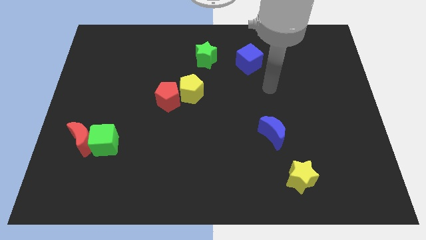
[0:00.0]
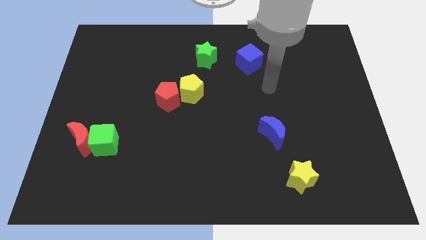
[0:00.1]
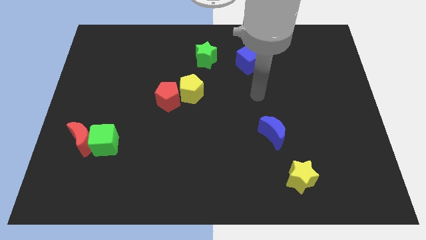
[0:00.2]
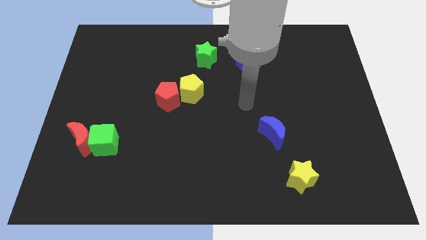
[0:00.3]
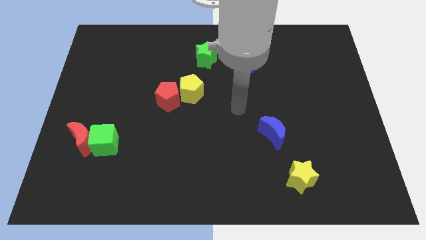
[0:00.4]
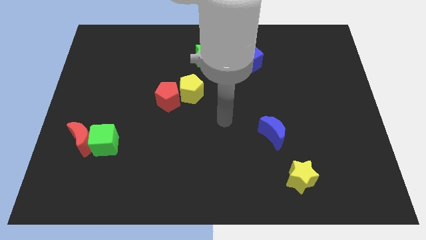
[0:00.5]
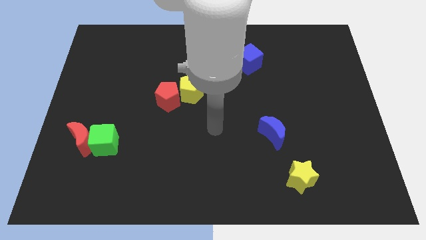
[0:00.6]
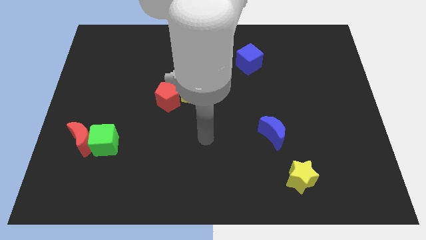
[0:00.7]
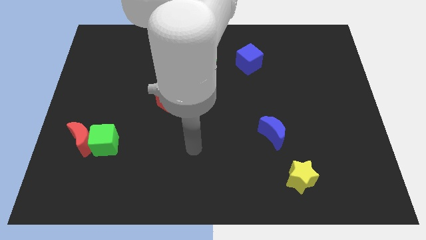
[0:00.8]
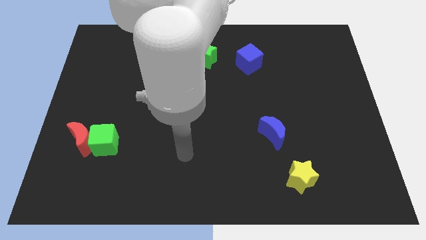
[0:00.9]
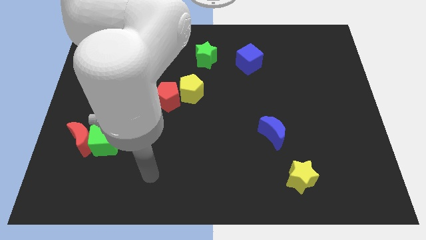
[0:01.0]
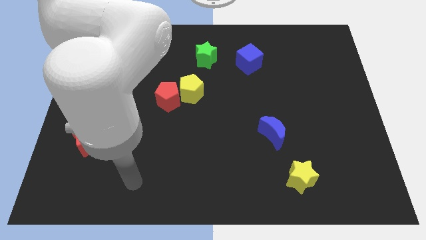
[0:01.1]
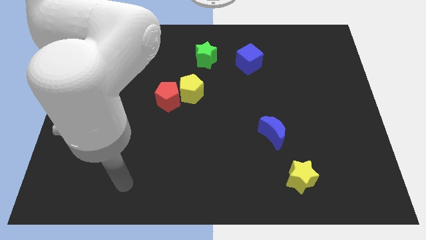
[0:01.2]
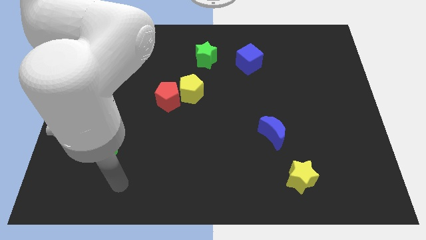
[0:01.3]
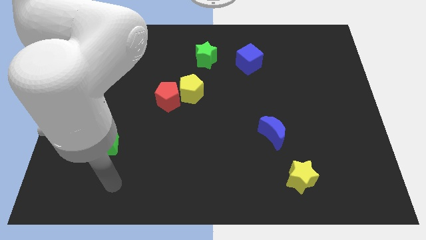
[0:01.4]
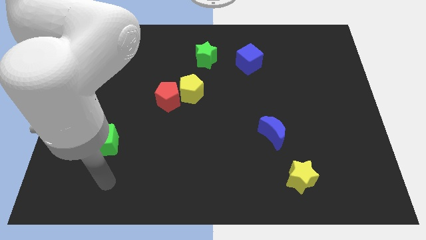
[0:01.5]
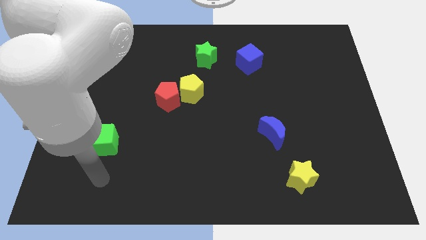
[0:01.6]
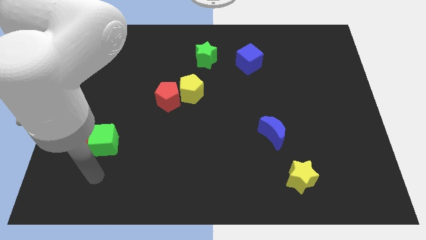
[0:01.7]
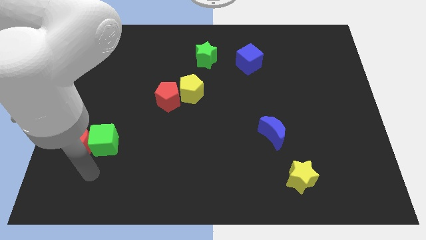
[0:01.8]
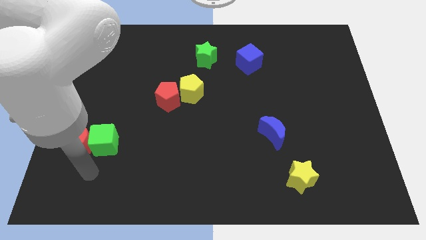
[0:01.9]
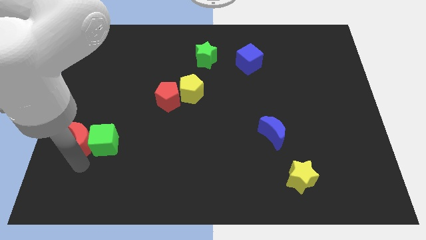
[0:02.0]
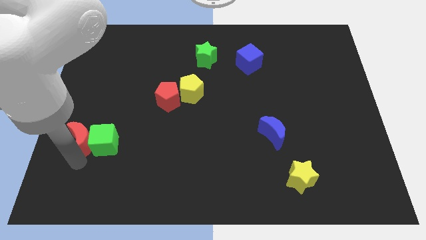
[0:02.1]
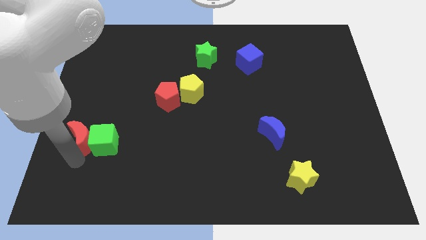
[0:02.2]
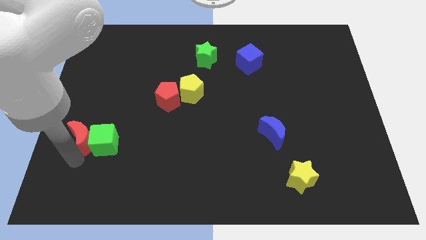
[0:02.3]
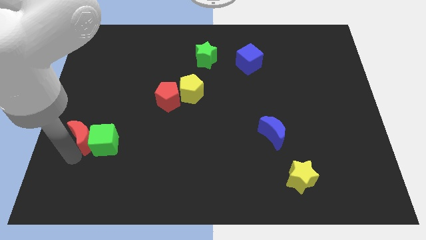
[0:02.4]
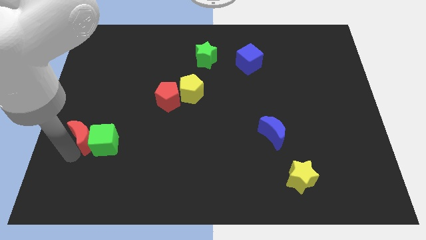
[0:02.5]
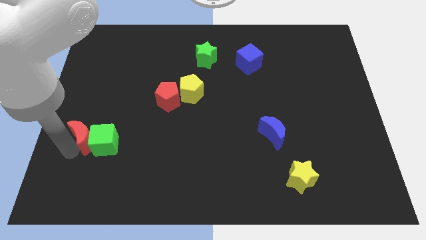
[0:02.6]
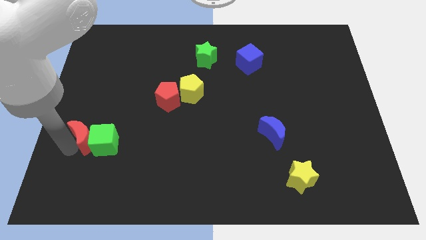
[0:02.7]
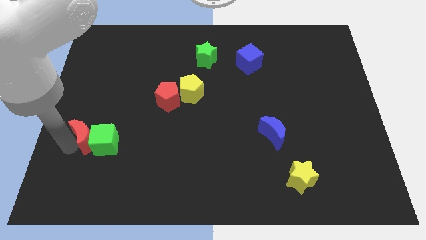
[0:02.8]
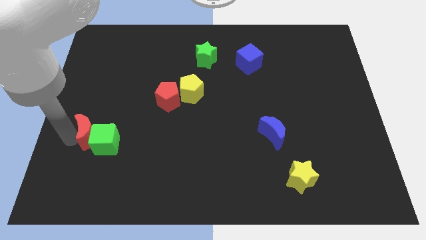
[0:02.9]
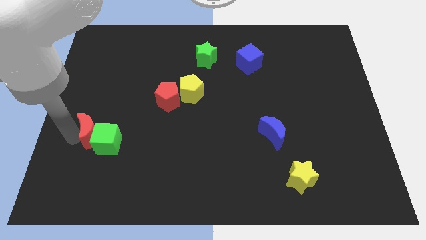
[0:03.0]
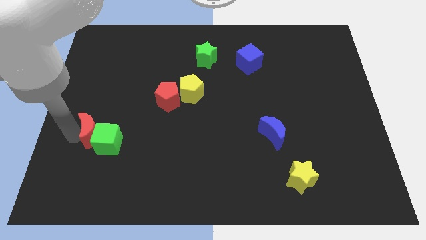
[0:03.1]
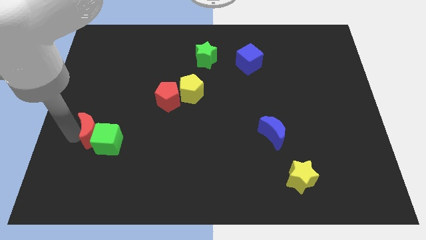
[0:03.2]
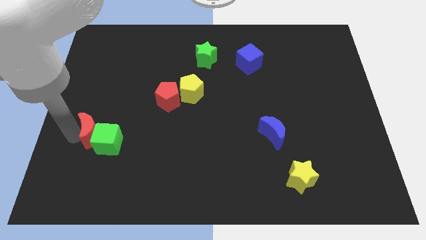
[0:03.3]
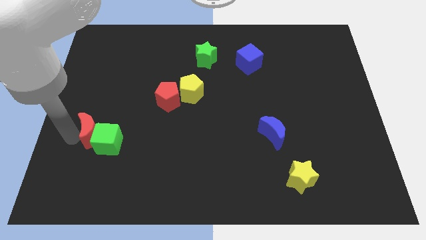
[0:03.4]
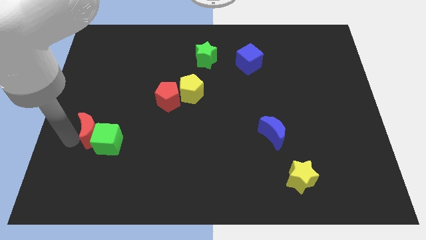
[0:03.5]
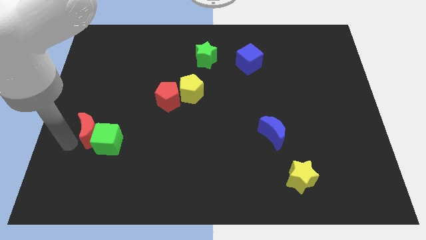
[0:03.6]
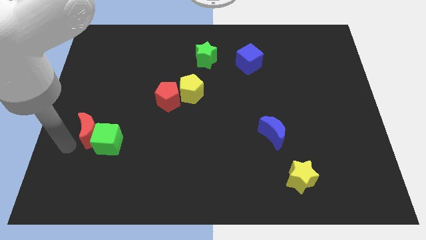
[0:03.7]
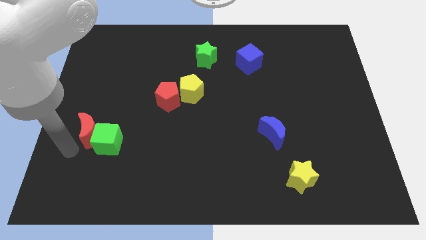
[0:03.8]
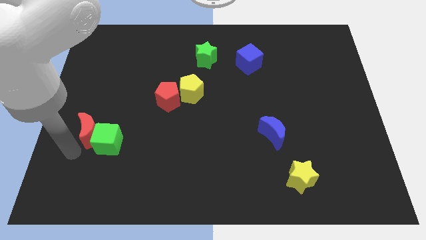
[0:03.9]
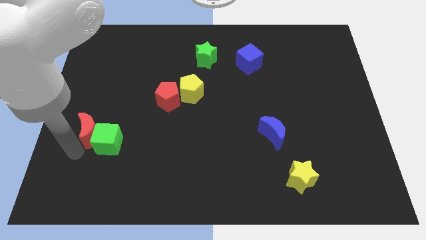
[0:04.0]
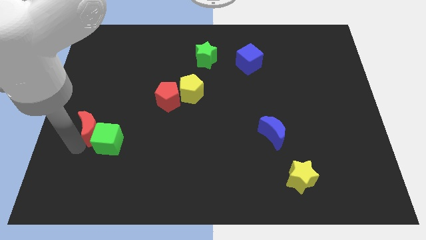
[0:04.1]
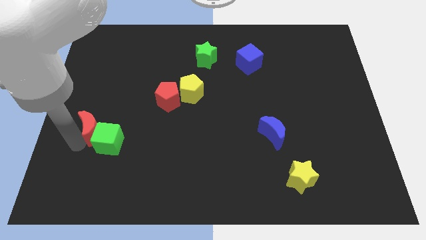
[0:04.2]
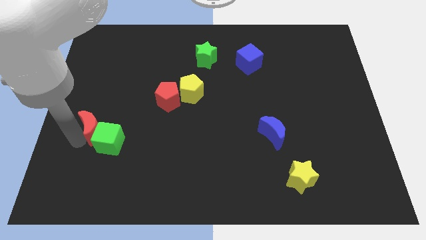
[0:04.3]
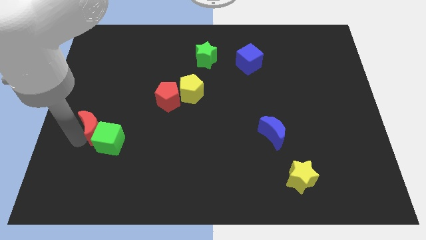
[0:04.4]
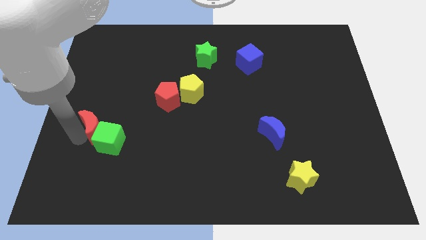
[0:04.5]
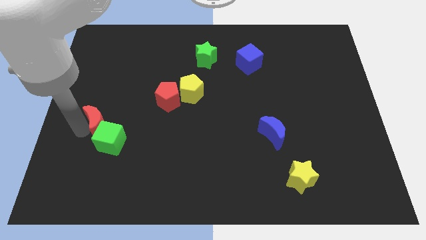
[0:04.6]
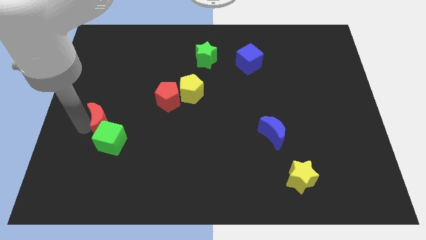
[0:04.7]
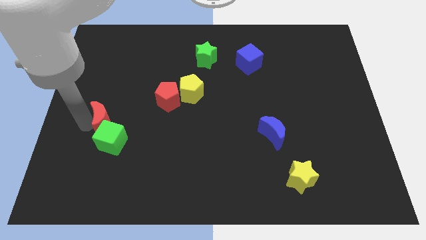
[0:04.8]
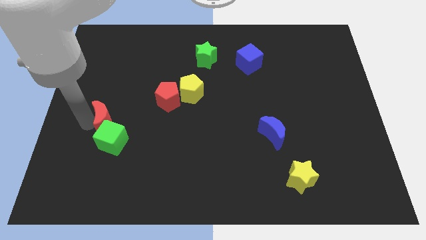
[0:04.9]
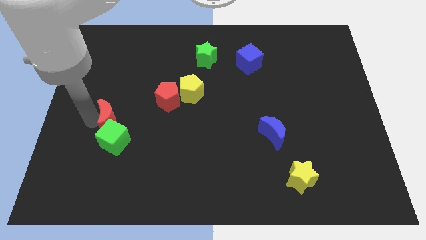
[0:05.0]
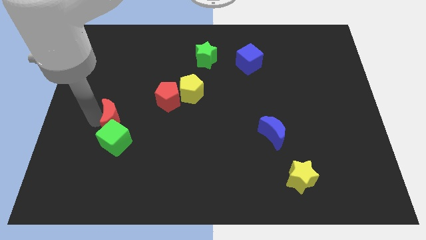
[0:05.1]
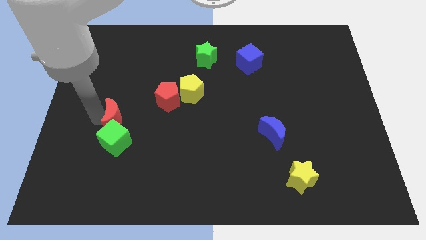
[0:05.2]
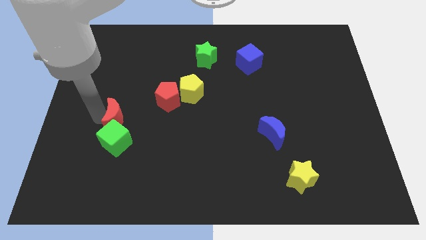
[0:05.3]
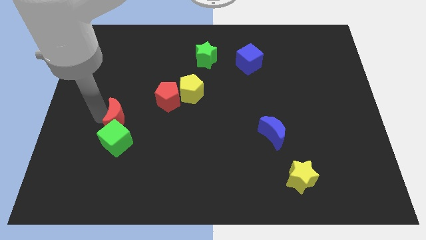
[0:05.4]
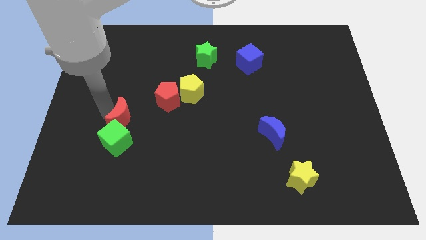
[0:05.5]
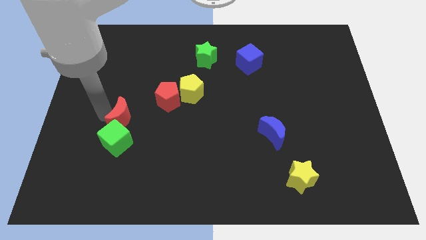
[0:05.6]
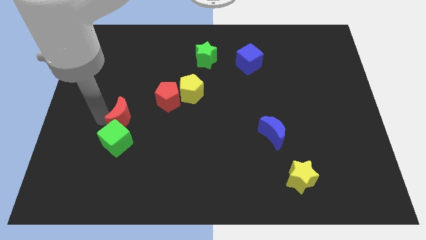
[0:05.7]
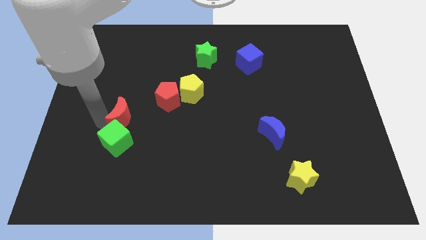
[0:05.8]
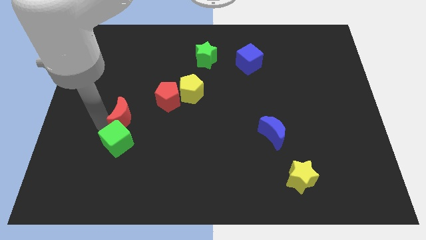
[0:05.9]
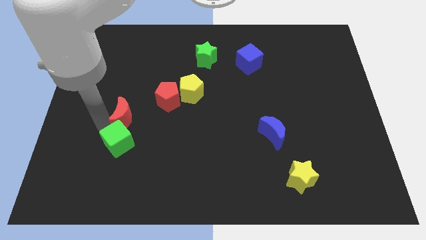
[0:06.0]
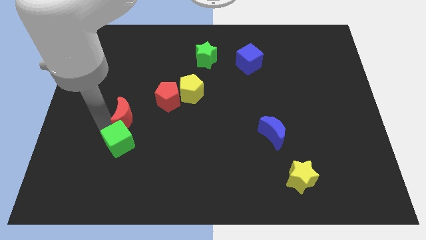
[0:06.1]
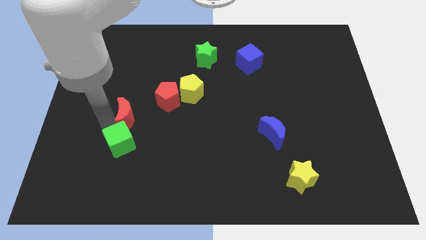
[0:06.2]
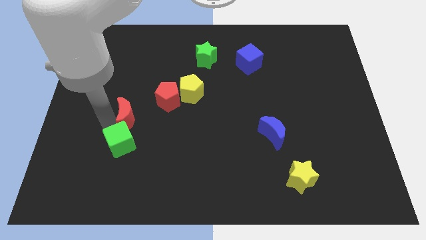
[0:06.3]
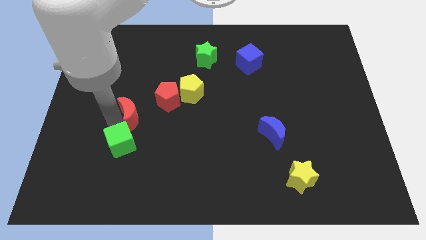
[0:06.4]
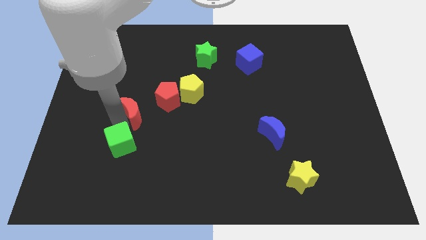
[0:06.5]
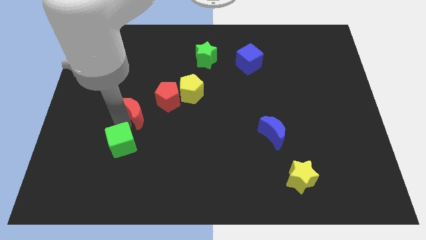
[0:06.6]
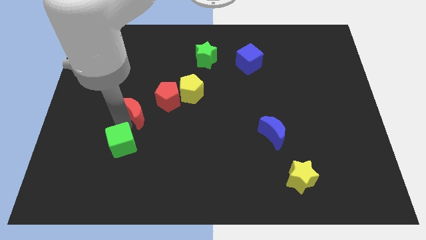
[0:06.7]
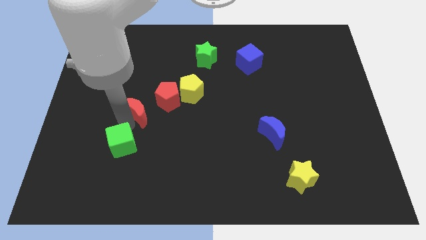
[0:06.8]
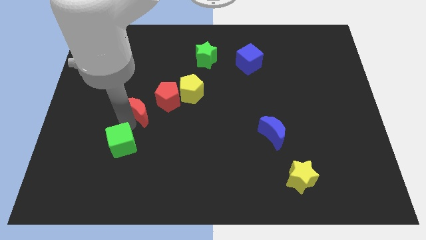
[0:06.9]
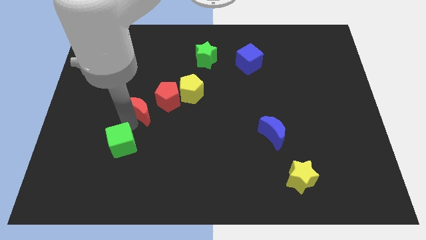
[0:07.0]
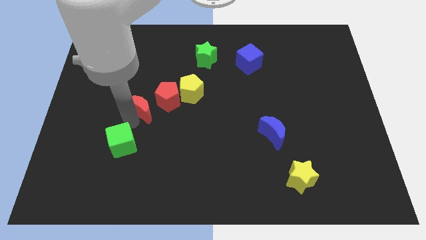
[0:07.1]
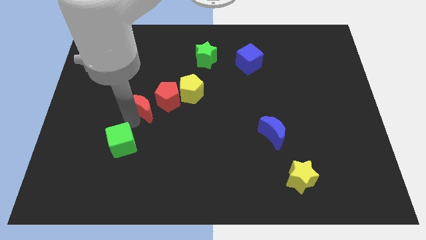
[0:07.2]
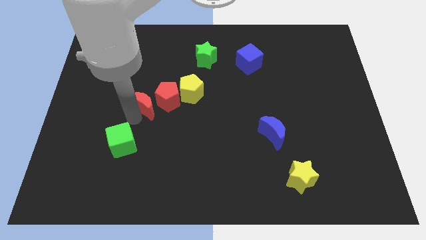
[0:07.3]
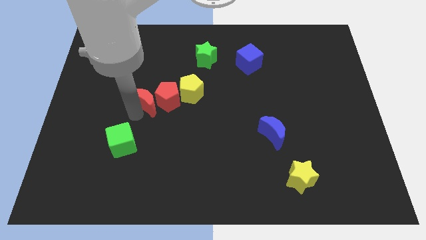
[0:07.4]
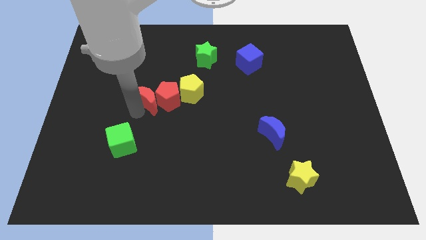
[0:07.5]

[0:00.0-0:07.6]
move the red moon next to the red pentagon

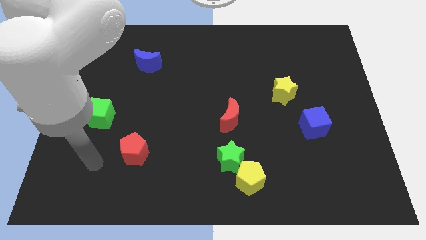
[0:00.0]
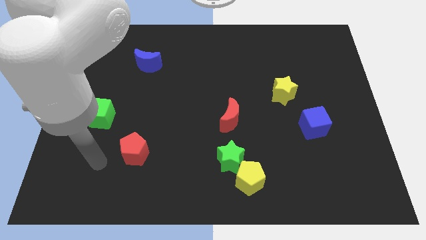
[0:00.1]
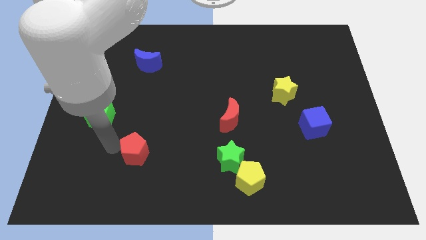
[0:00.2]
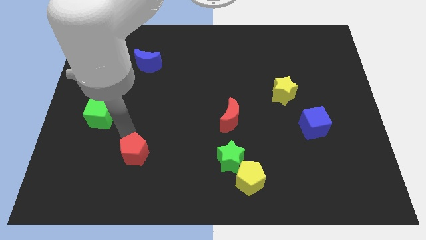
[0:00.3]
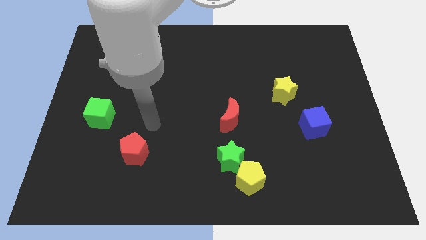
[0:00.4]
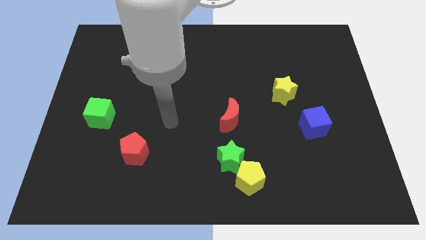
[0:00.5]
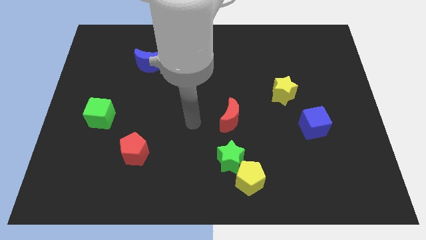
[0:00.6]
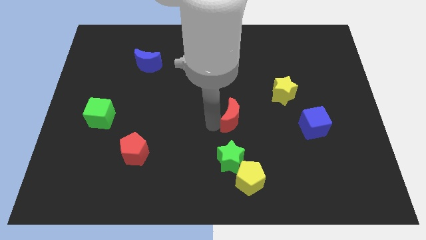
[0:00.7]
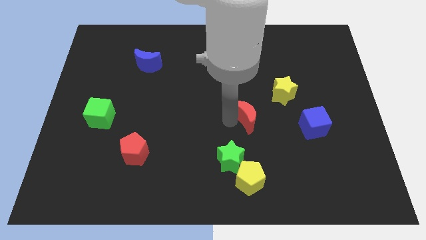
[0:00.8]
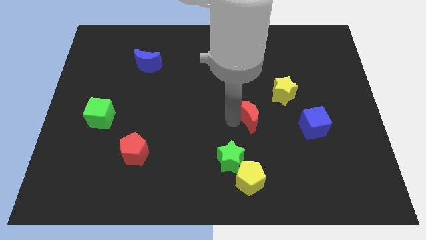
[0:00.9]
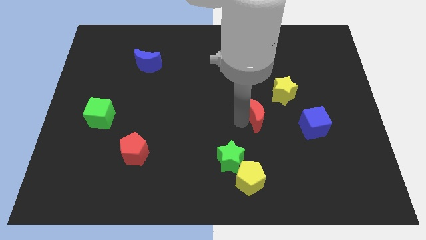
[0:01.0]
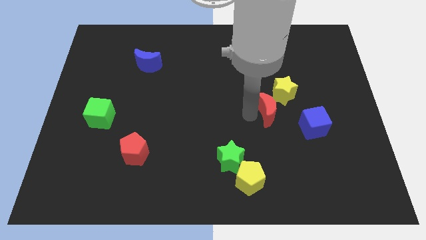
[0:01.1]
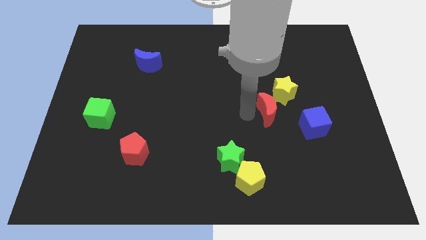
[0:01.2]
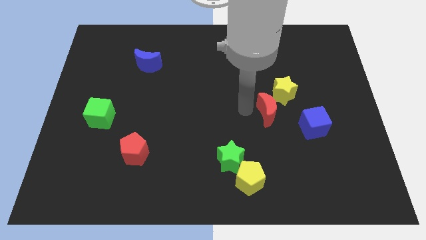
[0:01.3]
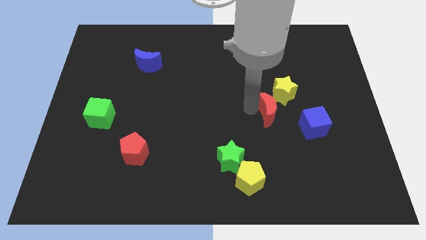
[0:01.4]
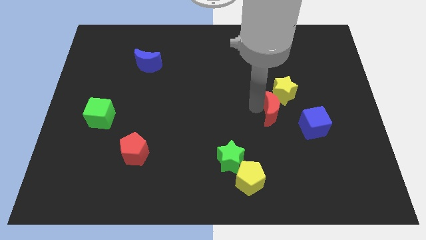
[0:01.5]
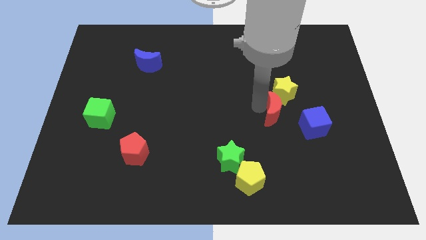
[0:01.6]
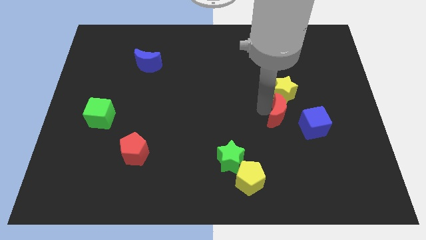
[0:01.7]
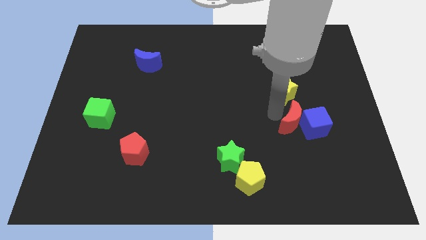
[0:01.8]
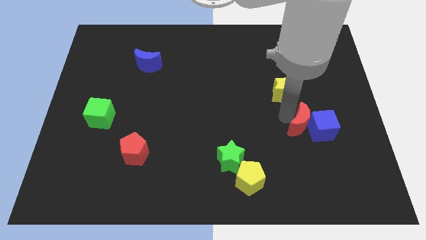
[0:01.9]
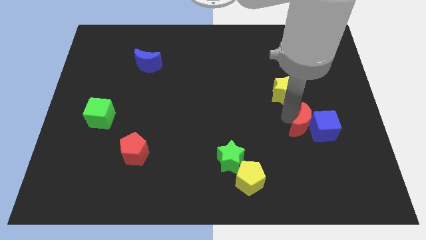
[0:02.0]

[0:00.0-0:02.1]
move the red moon to the blue cube
